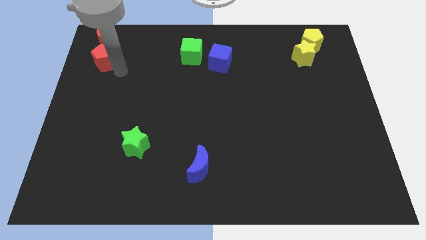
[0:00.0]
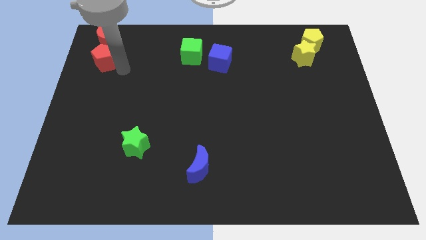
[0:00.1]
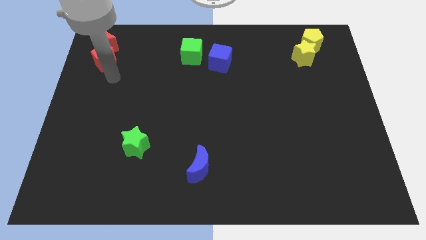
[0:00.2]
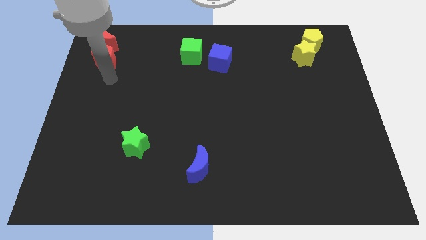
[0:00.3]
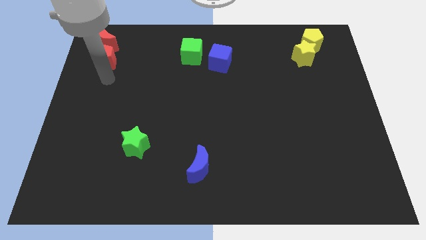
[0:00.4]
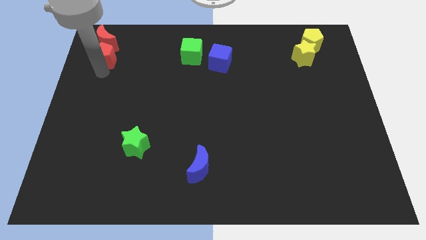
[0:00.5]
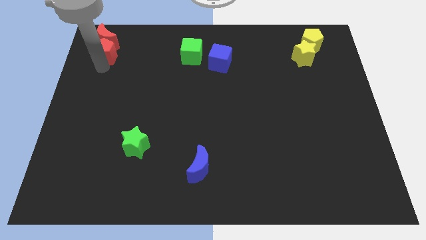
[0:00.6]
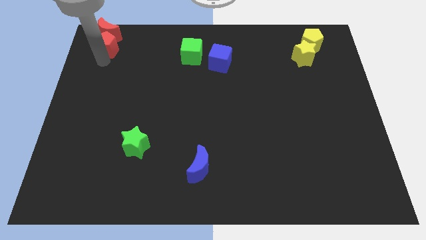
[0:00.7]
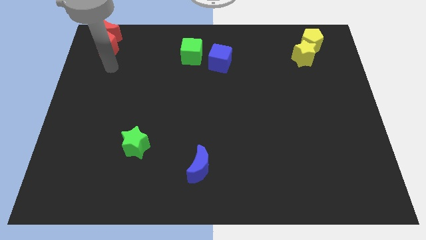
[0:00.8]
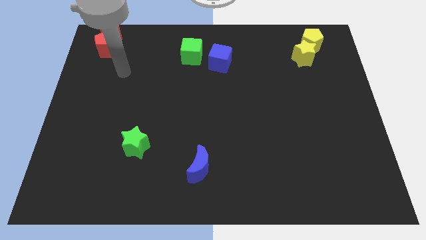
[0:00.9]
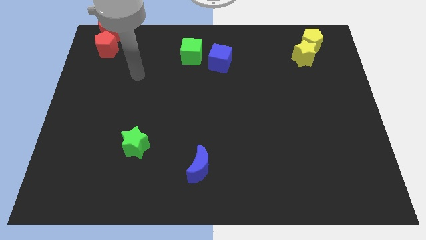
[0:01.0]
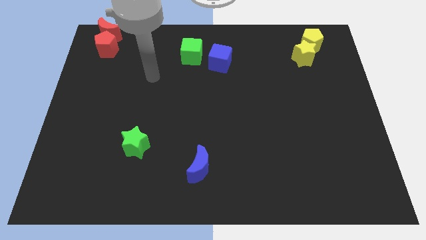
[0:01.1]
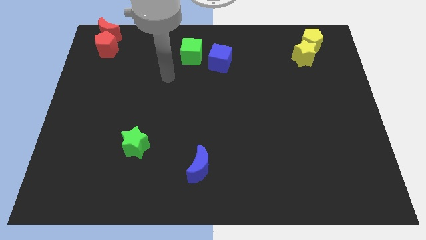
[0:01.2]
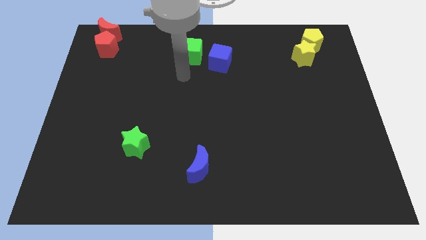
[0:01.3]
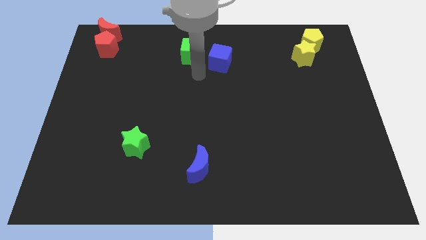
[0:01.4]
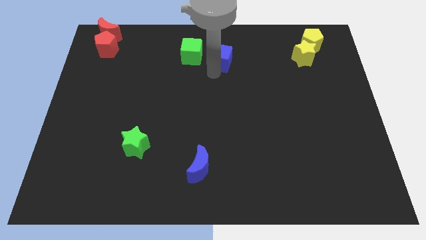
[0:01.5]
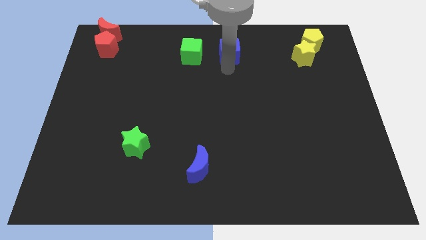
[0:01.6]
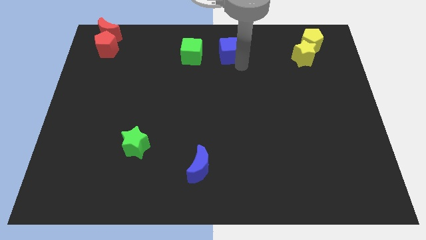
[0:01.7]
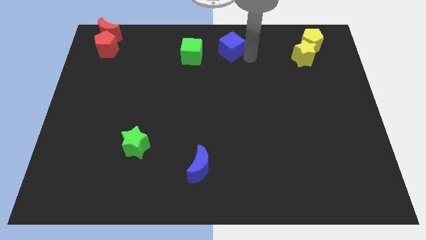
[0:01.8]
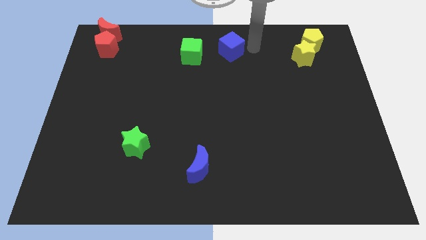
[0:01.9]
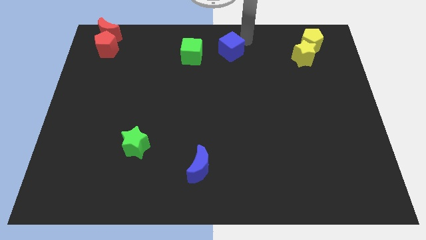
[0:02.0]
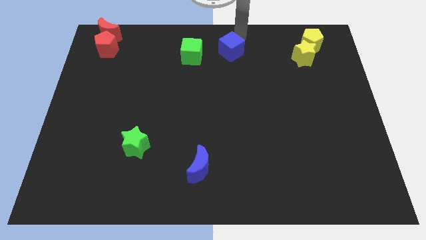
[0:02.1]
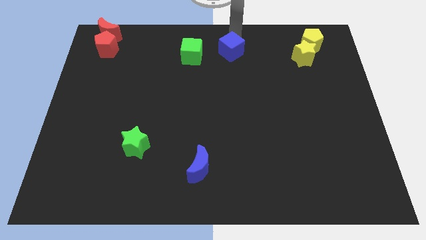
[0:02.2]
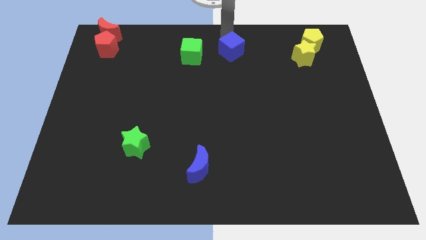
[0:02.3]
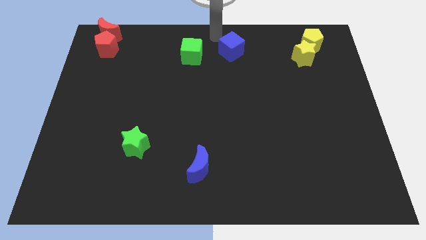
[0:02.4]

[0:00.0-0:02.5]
move the red pentagon into the red crescent

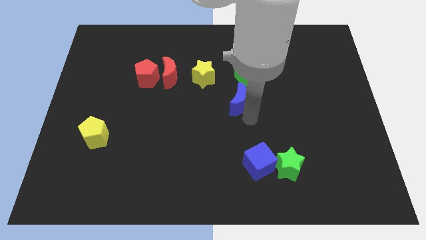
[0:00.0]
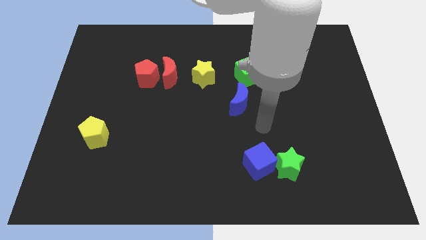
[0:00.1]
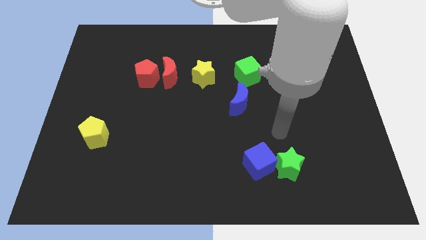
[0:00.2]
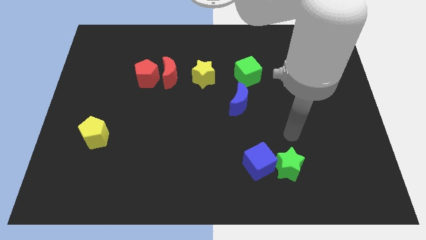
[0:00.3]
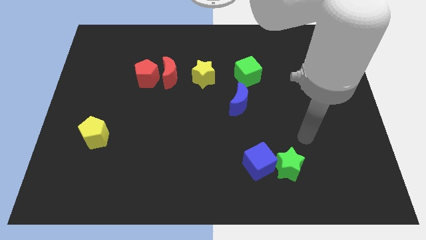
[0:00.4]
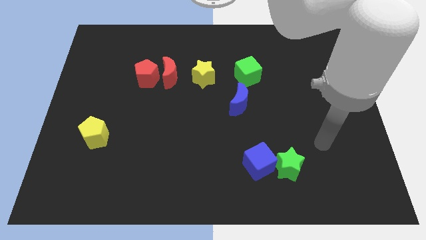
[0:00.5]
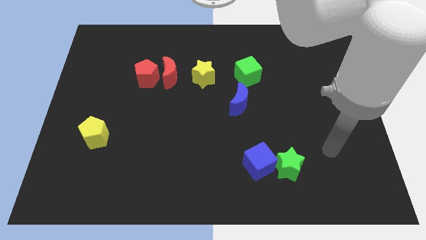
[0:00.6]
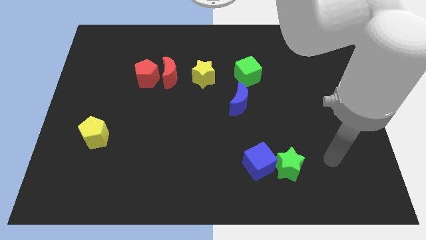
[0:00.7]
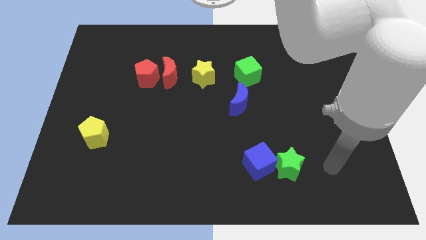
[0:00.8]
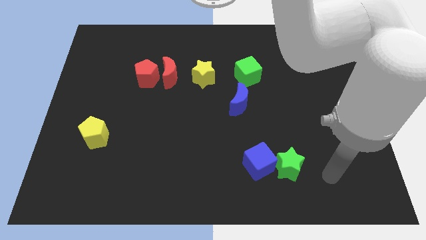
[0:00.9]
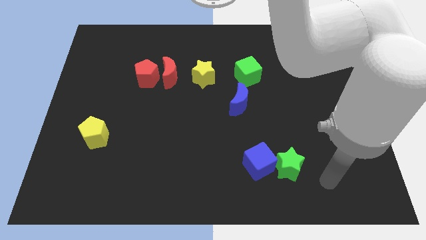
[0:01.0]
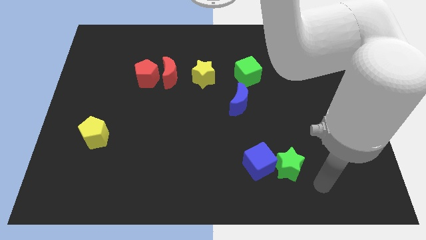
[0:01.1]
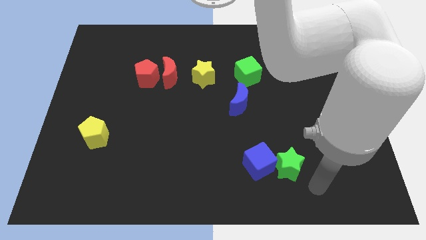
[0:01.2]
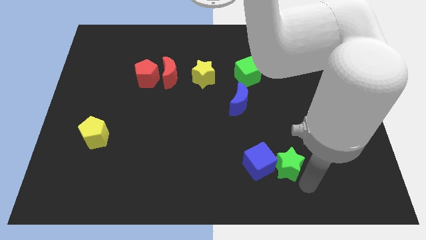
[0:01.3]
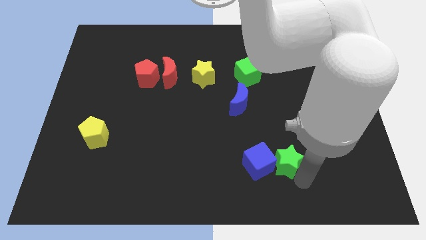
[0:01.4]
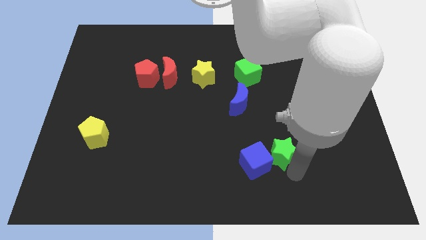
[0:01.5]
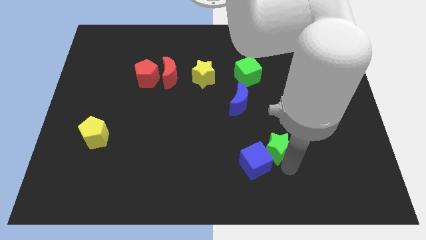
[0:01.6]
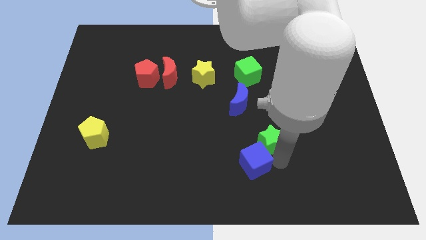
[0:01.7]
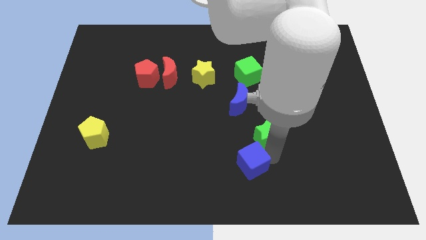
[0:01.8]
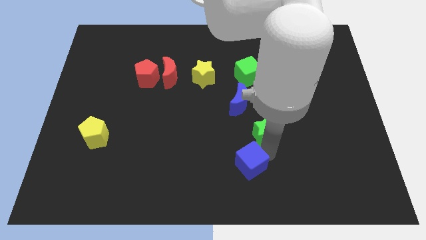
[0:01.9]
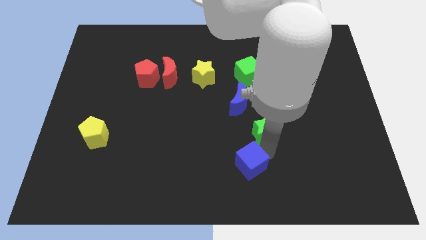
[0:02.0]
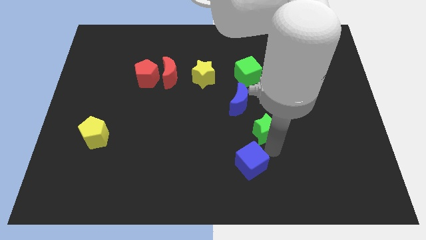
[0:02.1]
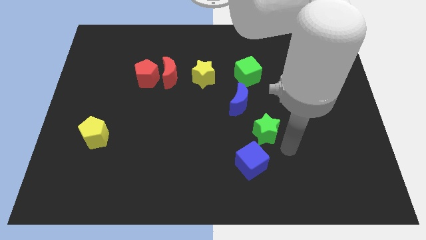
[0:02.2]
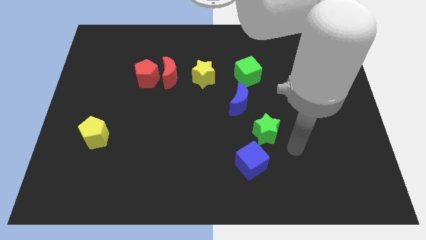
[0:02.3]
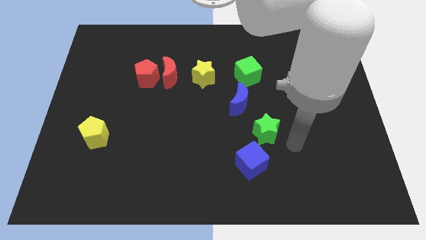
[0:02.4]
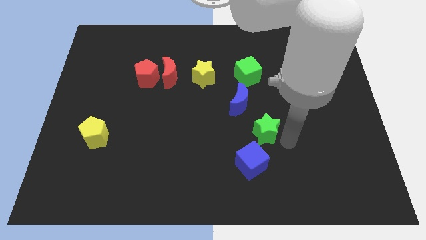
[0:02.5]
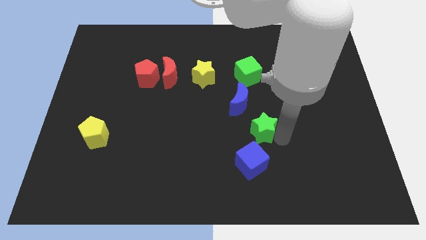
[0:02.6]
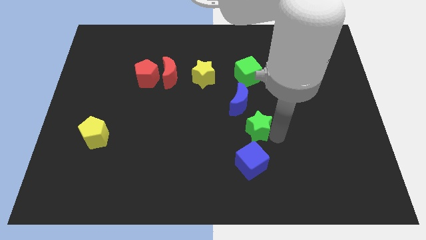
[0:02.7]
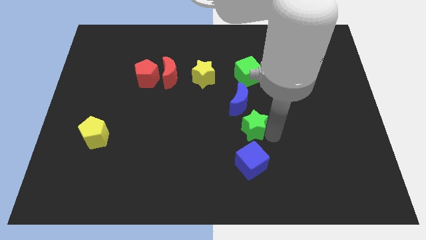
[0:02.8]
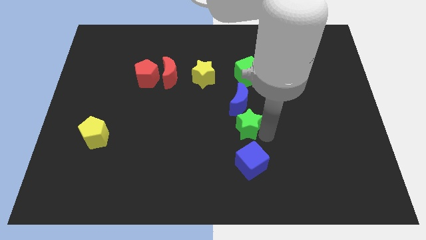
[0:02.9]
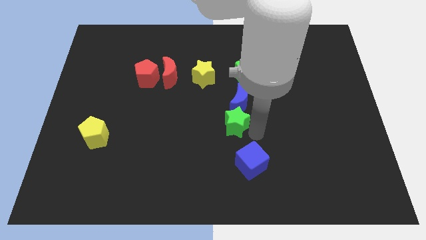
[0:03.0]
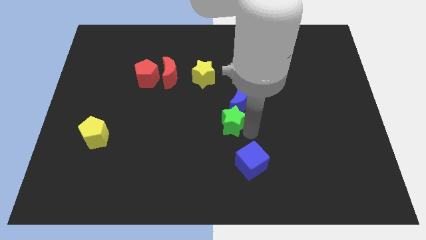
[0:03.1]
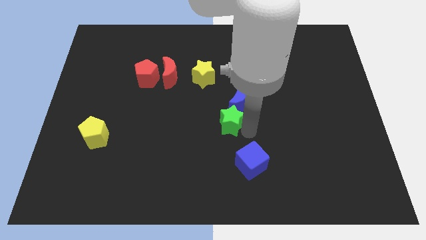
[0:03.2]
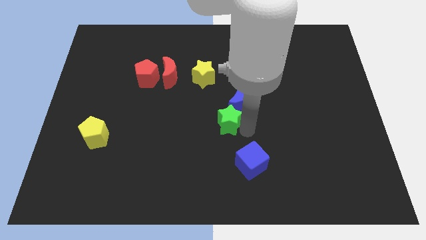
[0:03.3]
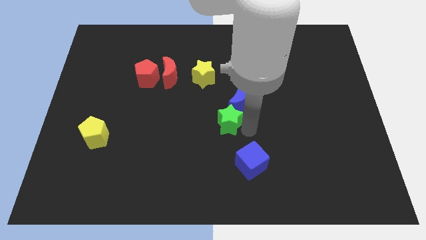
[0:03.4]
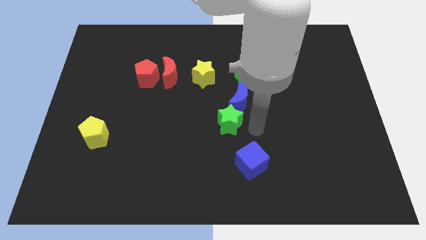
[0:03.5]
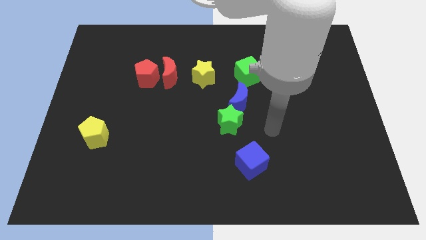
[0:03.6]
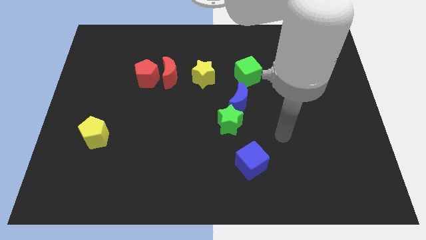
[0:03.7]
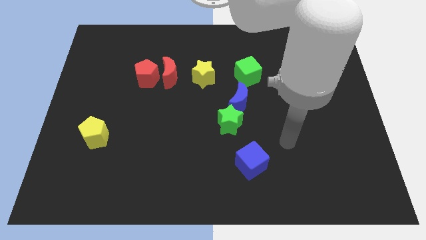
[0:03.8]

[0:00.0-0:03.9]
place the green star below the blue moon

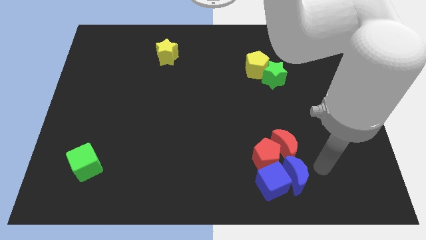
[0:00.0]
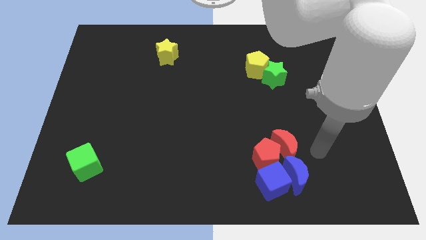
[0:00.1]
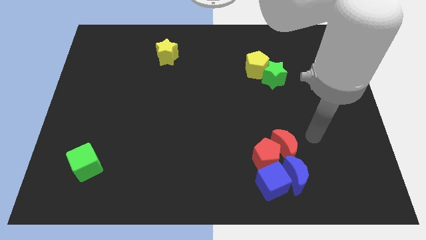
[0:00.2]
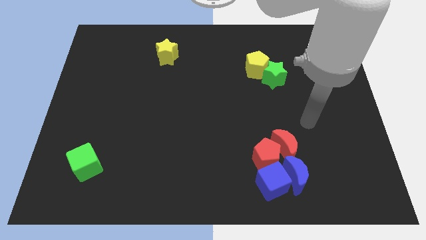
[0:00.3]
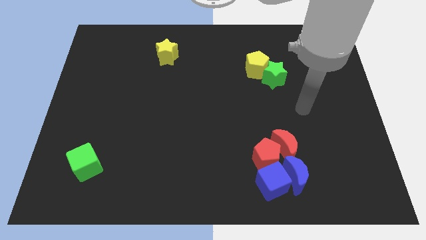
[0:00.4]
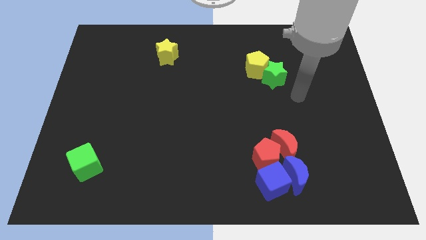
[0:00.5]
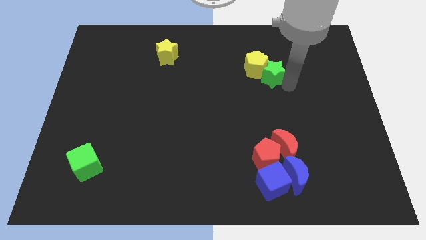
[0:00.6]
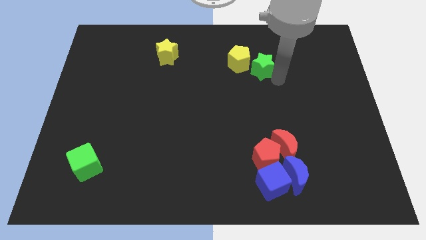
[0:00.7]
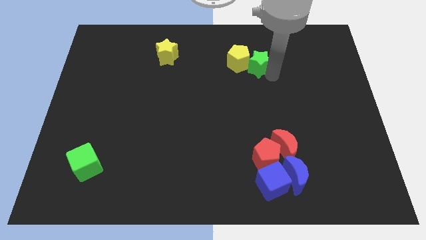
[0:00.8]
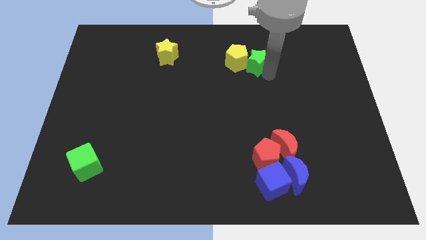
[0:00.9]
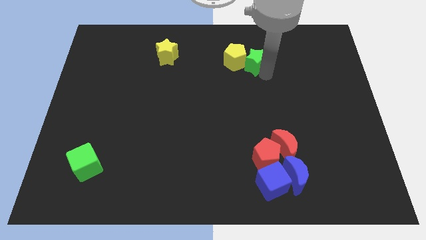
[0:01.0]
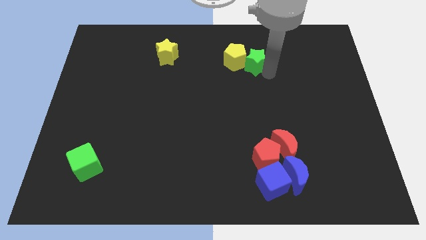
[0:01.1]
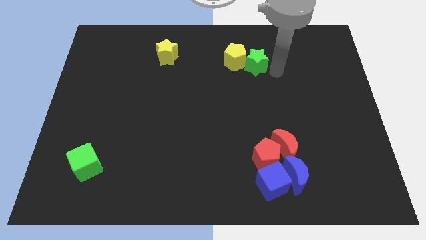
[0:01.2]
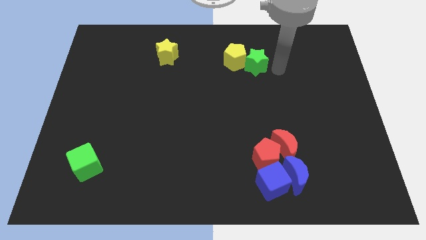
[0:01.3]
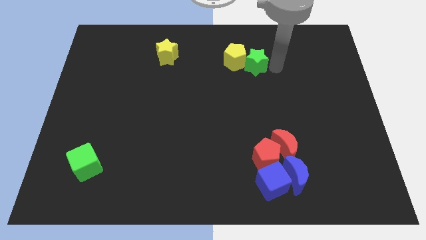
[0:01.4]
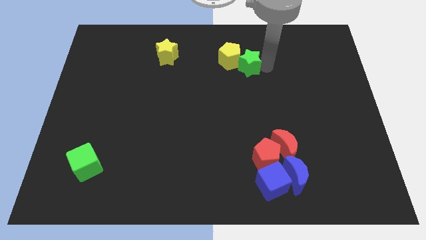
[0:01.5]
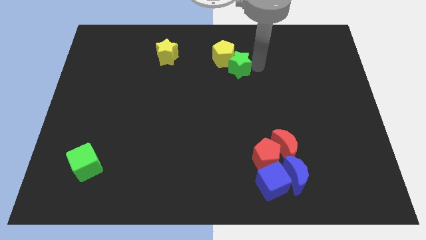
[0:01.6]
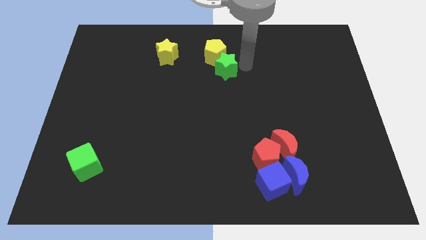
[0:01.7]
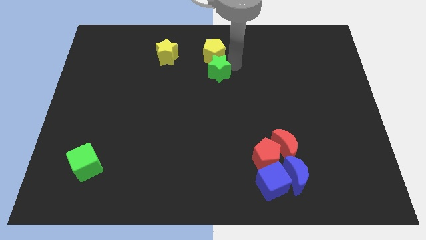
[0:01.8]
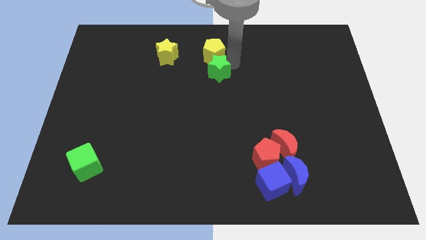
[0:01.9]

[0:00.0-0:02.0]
push the green star along with yellow pentagon towards the right of yellow star

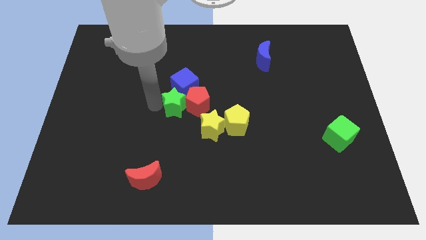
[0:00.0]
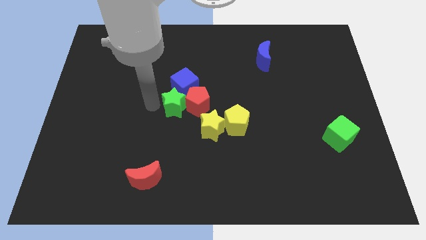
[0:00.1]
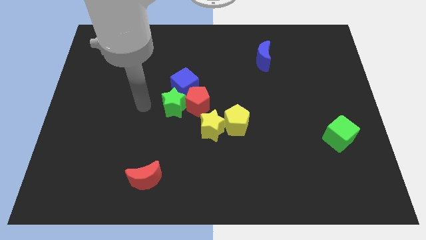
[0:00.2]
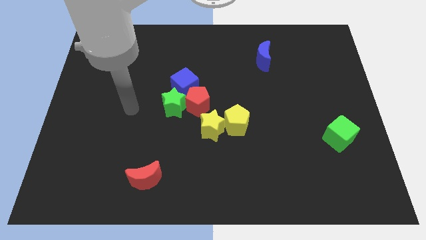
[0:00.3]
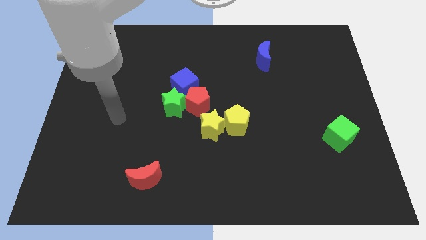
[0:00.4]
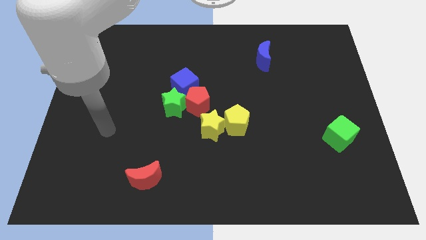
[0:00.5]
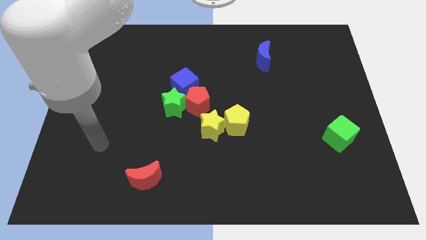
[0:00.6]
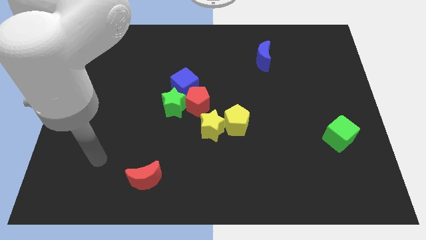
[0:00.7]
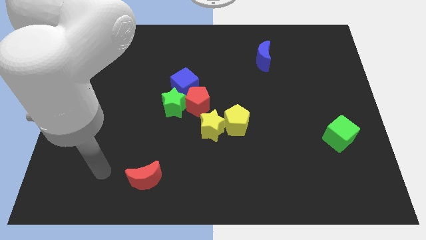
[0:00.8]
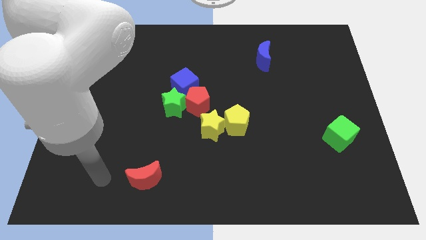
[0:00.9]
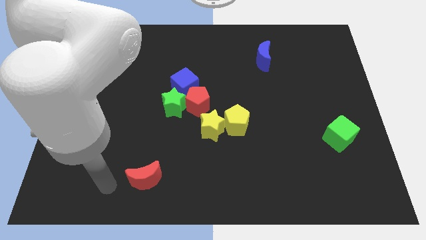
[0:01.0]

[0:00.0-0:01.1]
move the arm away from the green star
